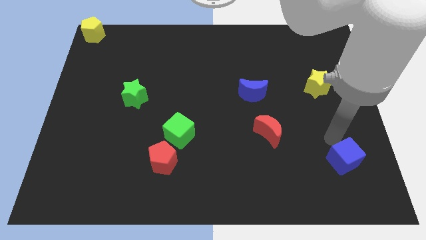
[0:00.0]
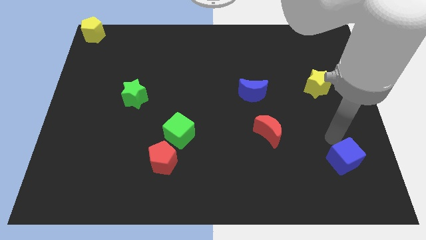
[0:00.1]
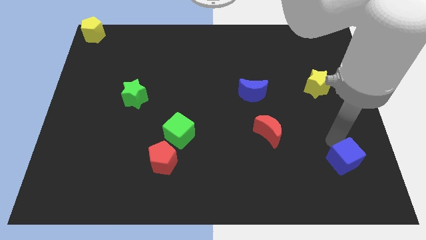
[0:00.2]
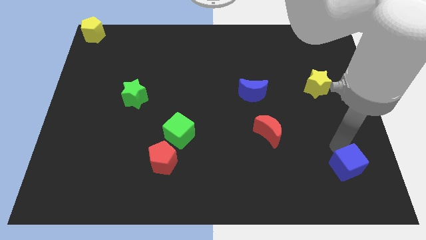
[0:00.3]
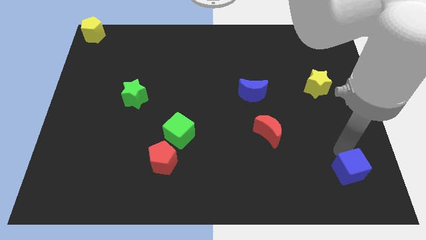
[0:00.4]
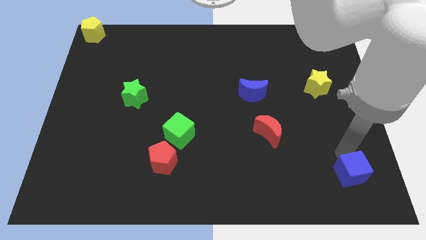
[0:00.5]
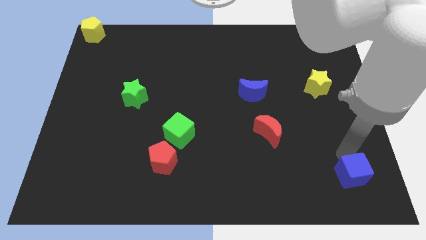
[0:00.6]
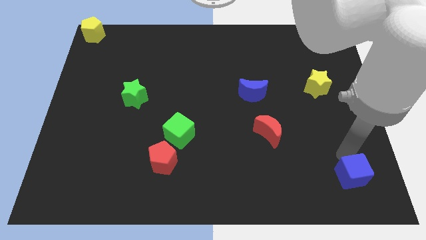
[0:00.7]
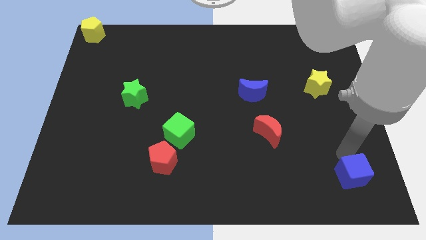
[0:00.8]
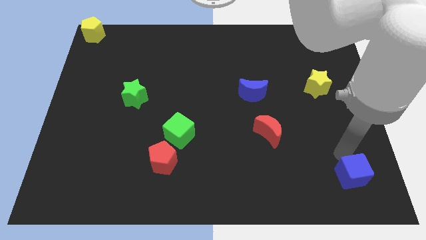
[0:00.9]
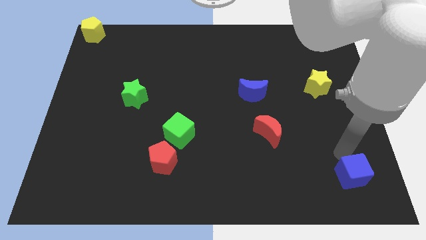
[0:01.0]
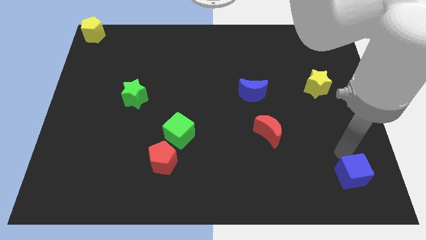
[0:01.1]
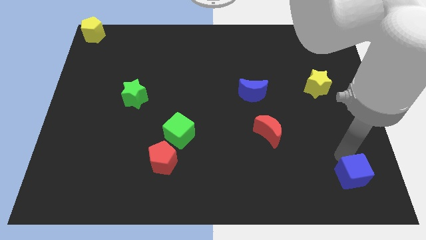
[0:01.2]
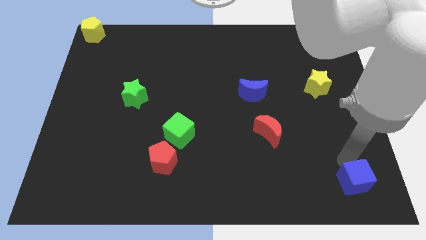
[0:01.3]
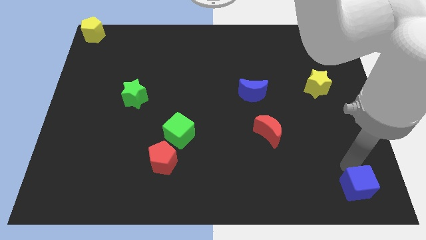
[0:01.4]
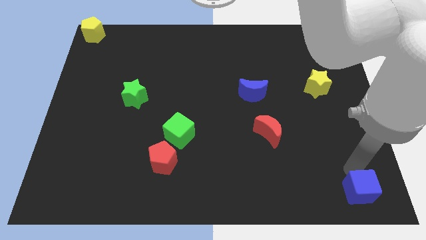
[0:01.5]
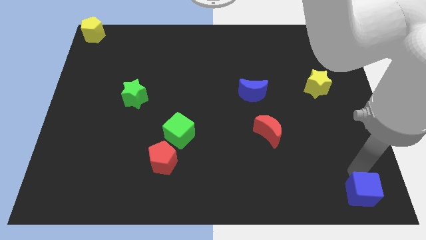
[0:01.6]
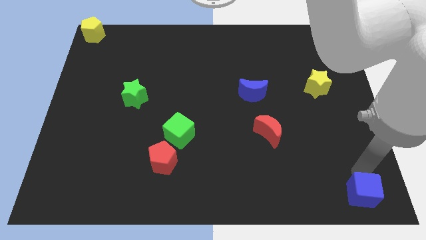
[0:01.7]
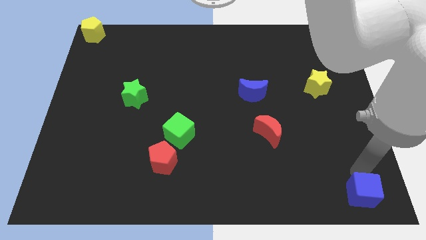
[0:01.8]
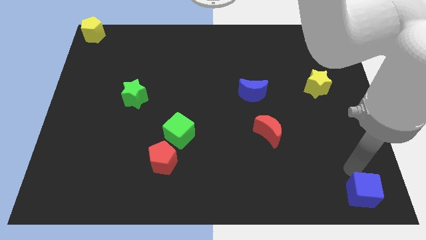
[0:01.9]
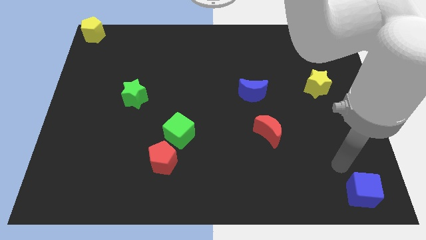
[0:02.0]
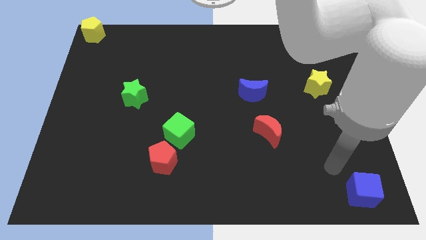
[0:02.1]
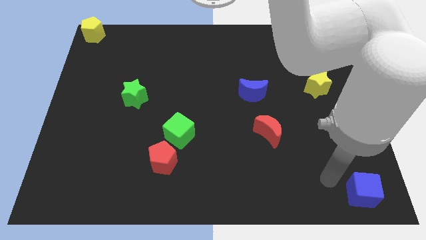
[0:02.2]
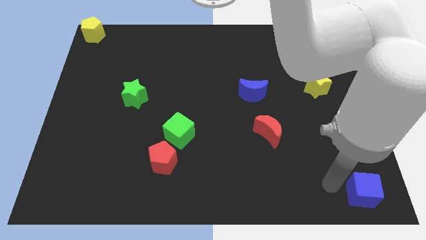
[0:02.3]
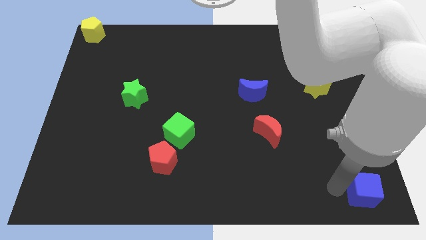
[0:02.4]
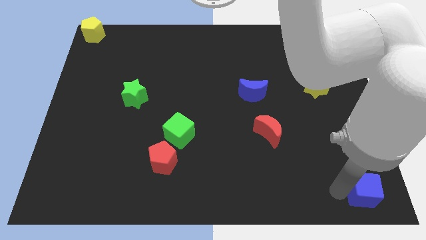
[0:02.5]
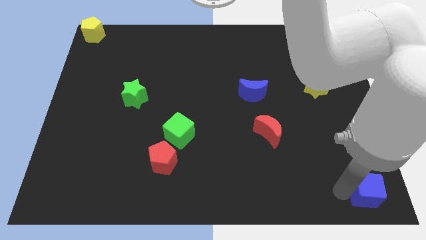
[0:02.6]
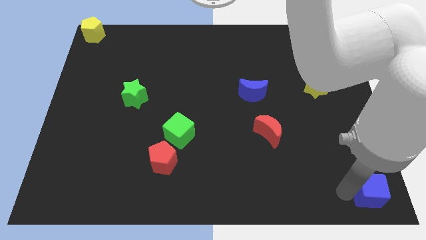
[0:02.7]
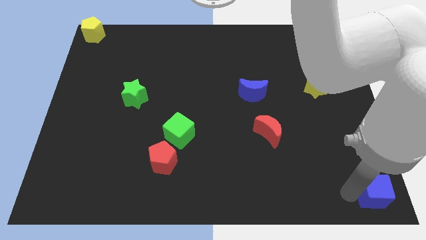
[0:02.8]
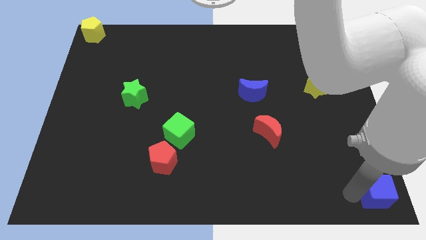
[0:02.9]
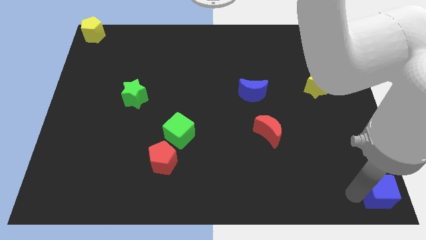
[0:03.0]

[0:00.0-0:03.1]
move the blue cube at the bottom right corner of the board

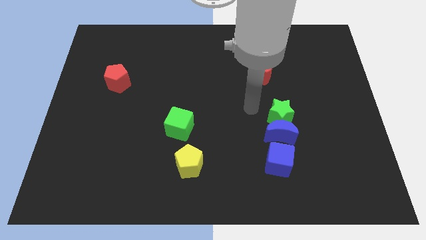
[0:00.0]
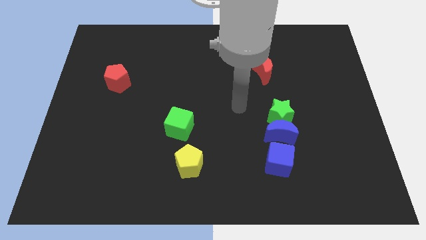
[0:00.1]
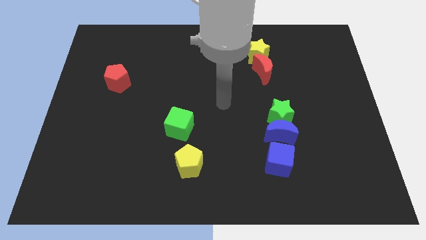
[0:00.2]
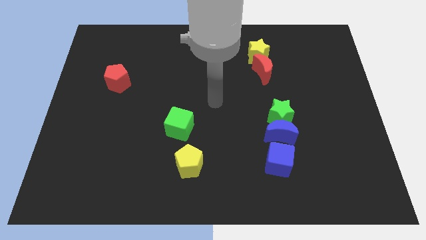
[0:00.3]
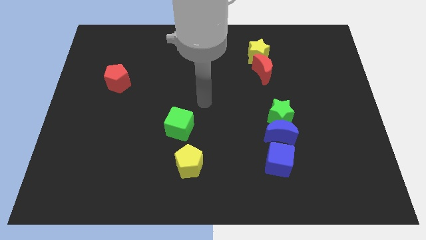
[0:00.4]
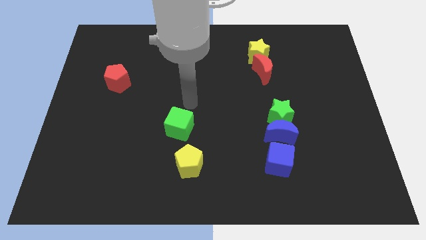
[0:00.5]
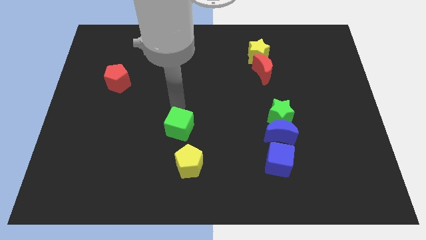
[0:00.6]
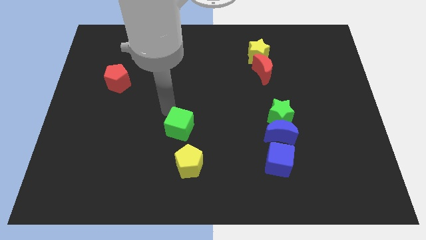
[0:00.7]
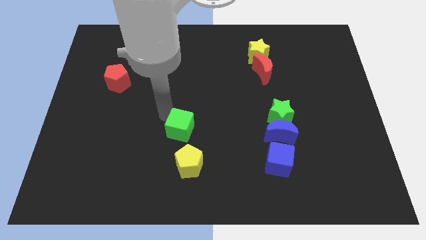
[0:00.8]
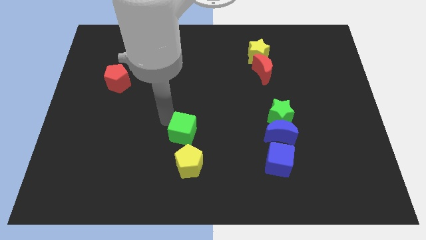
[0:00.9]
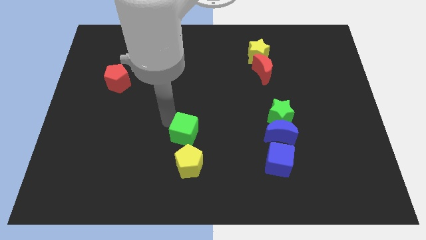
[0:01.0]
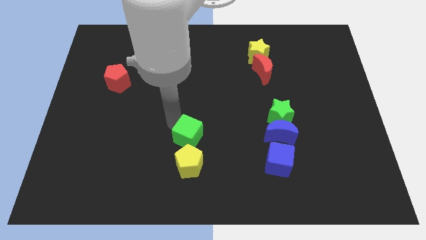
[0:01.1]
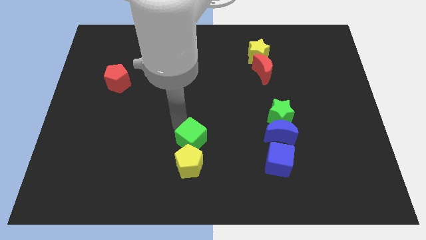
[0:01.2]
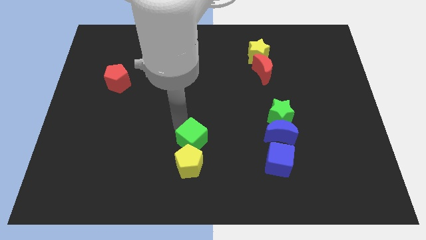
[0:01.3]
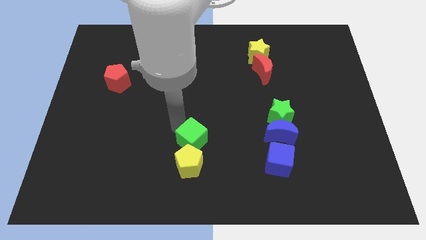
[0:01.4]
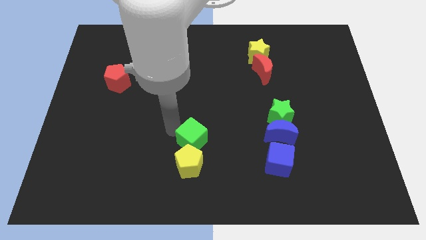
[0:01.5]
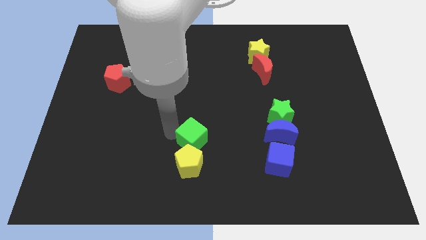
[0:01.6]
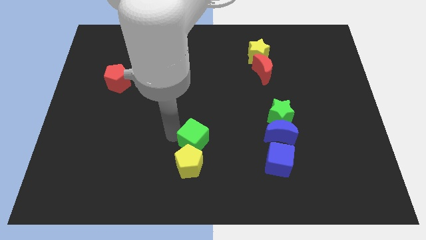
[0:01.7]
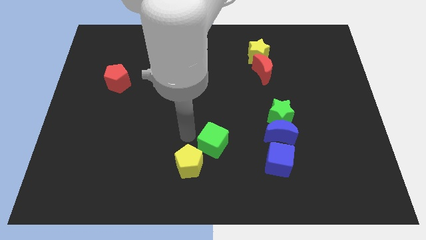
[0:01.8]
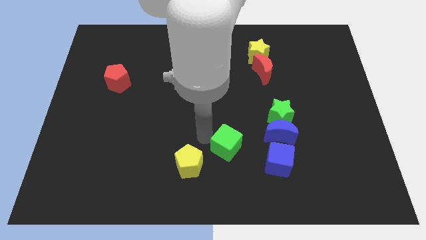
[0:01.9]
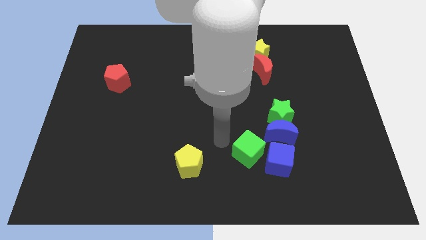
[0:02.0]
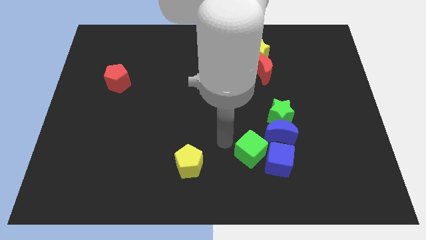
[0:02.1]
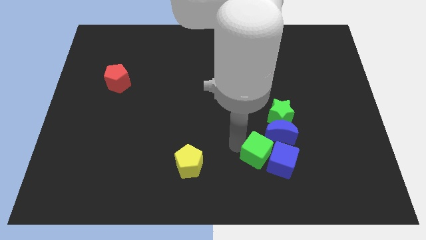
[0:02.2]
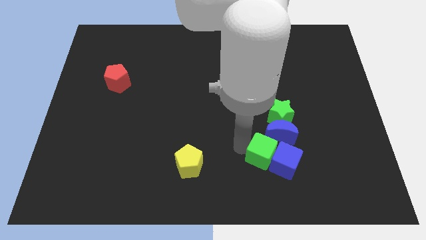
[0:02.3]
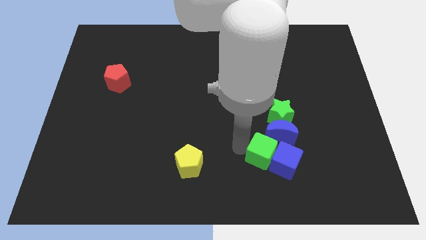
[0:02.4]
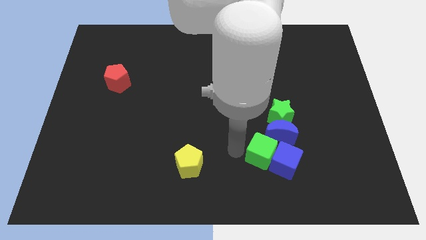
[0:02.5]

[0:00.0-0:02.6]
push the green cube into blue cube

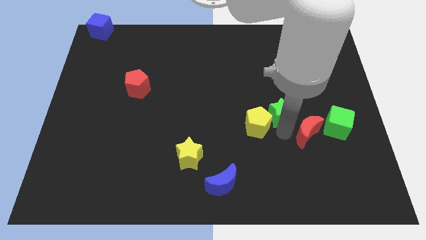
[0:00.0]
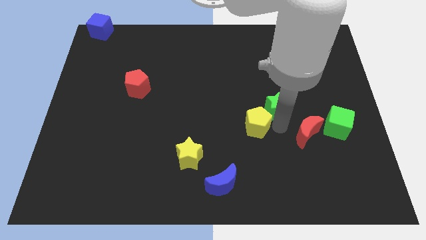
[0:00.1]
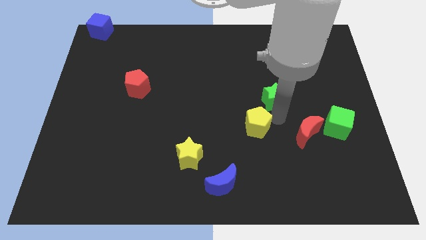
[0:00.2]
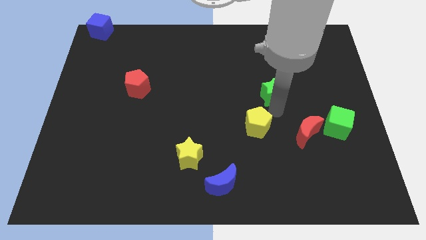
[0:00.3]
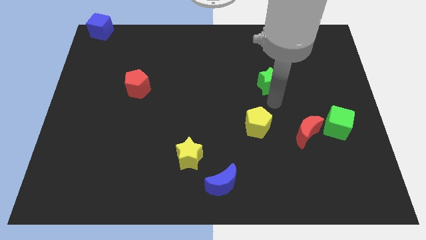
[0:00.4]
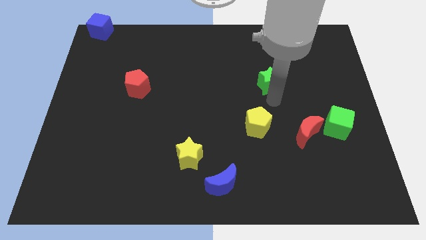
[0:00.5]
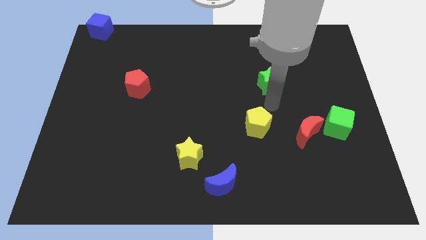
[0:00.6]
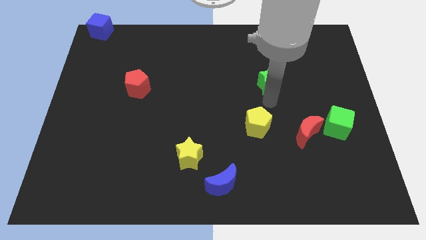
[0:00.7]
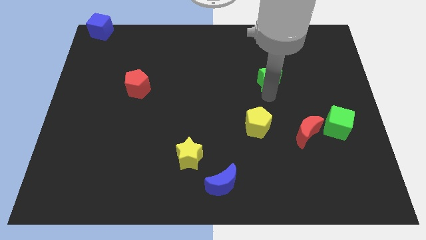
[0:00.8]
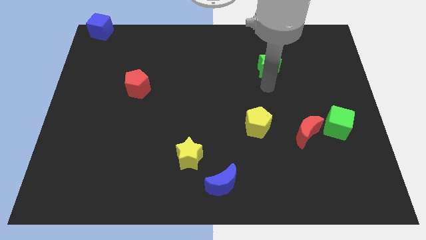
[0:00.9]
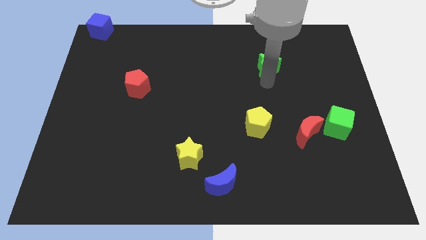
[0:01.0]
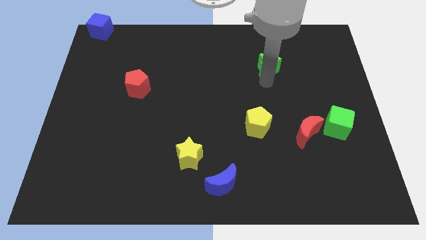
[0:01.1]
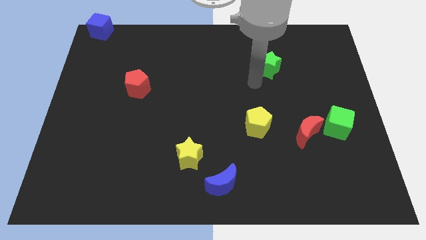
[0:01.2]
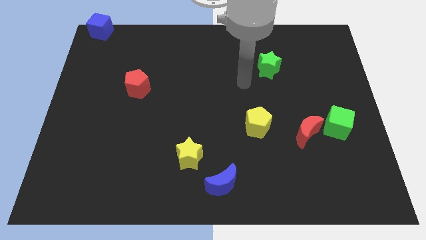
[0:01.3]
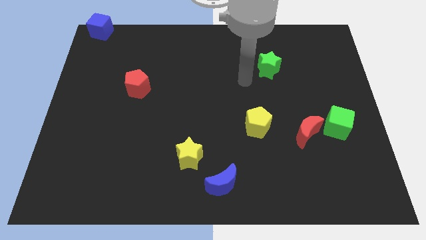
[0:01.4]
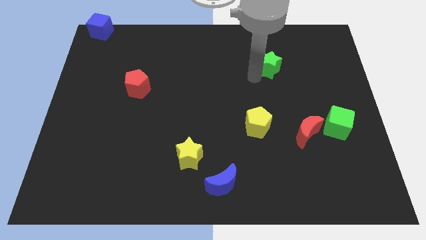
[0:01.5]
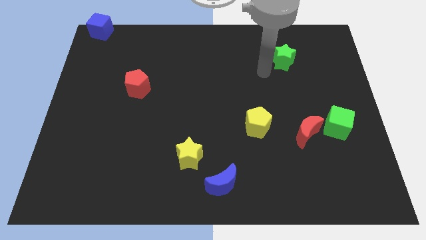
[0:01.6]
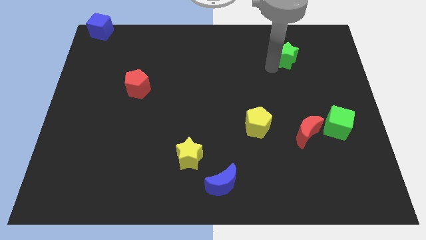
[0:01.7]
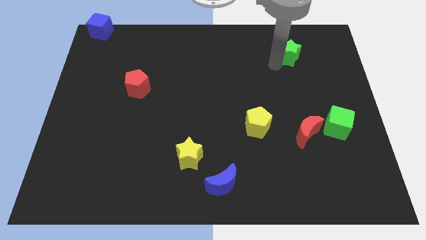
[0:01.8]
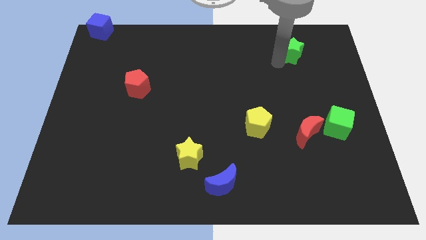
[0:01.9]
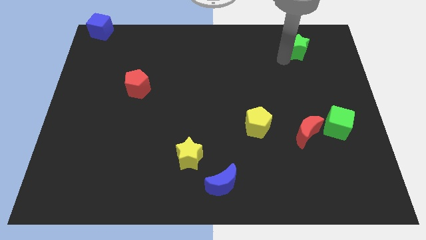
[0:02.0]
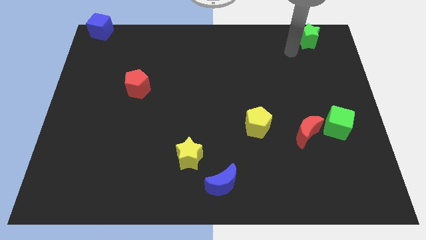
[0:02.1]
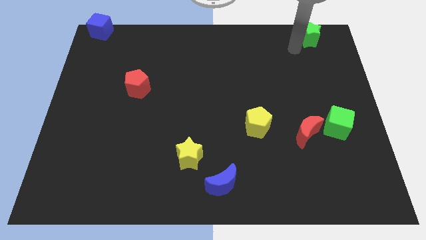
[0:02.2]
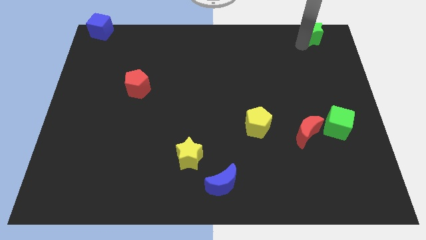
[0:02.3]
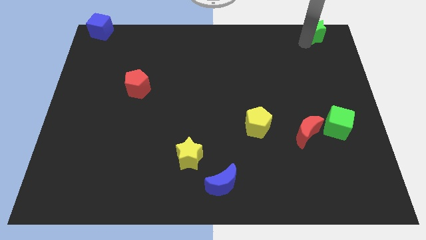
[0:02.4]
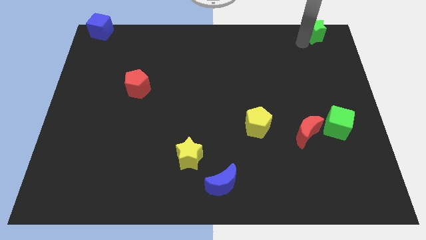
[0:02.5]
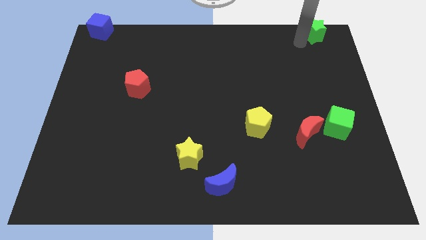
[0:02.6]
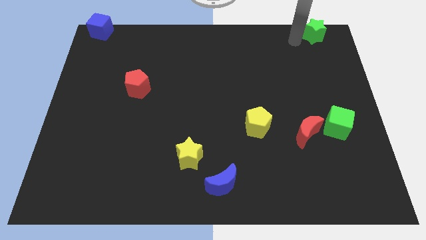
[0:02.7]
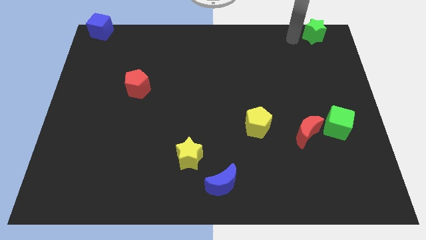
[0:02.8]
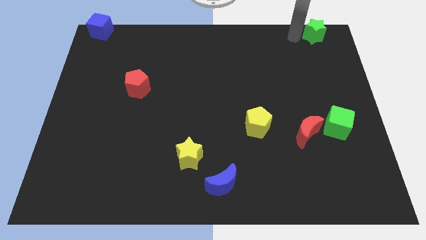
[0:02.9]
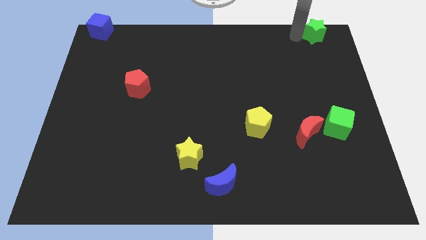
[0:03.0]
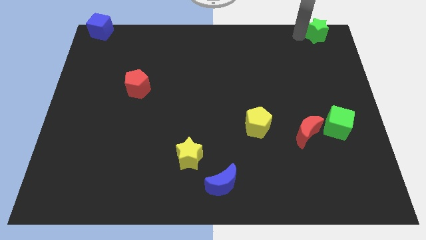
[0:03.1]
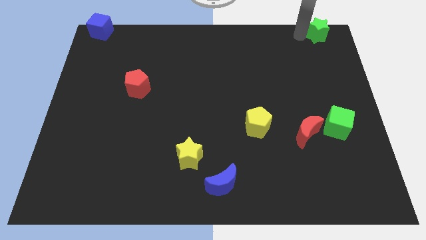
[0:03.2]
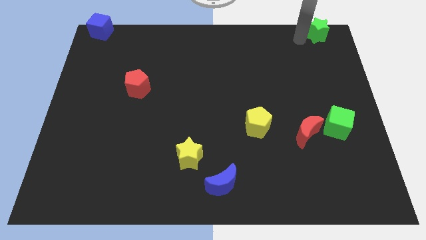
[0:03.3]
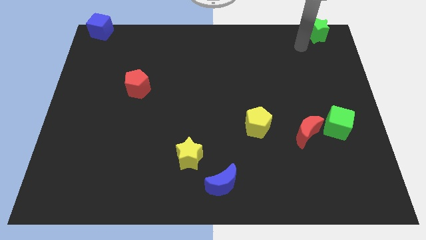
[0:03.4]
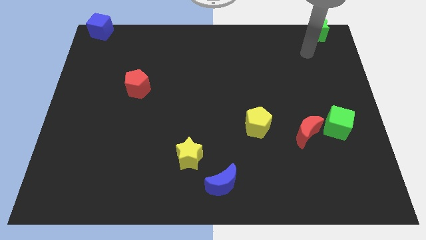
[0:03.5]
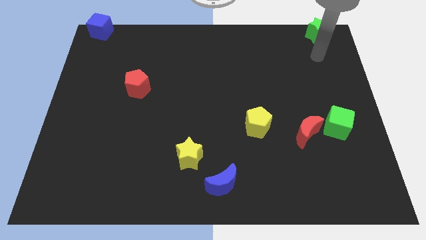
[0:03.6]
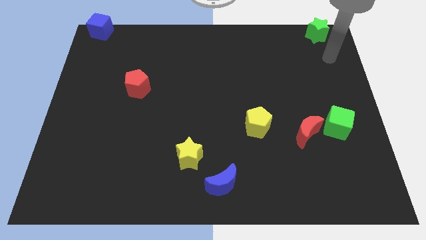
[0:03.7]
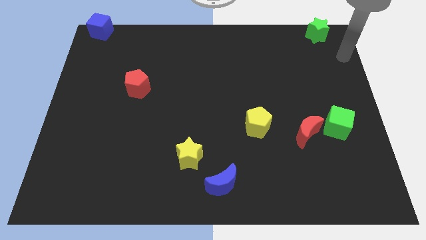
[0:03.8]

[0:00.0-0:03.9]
move the green star to the top right corner of the board
